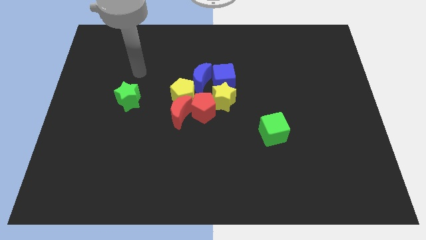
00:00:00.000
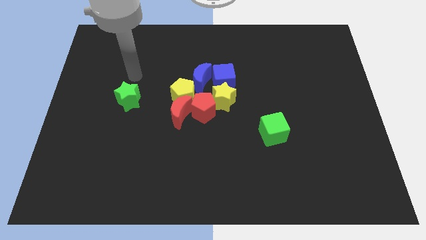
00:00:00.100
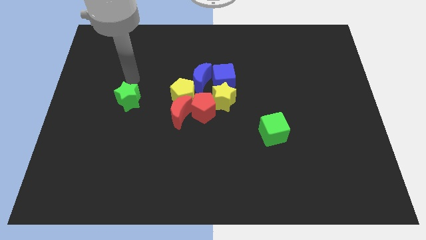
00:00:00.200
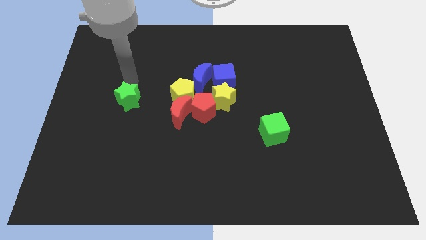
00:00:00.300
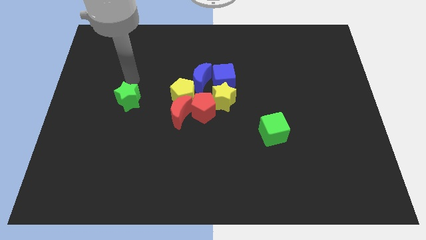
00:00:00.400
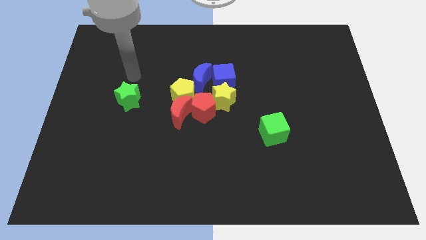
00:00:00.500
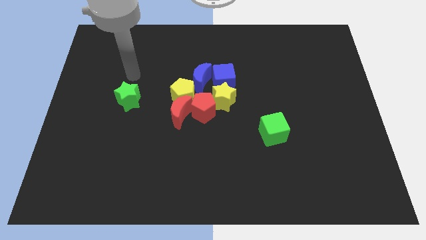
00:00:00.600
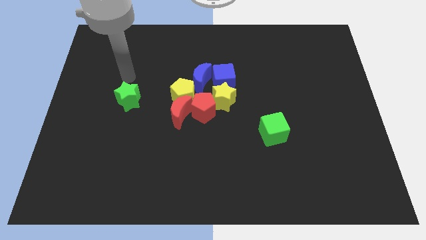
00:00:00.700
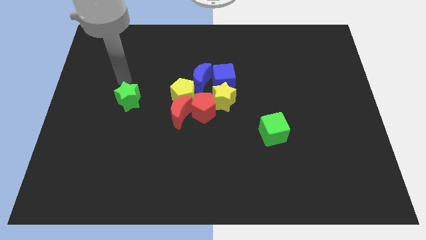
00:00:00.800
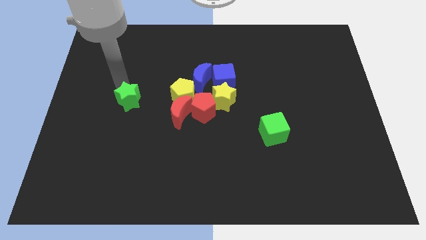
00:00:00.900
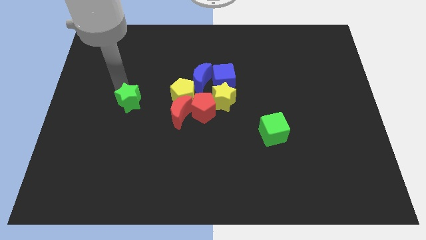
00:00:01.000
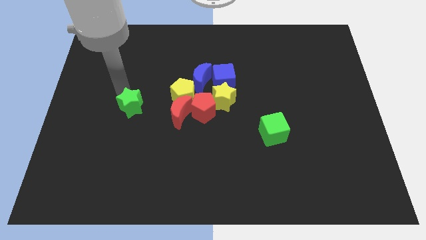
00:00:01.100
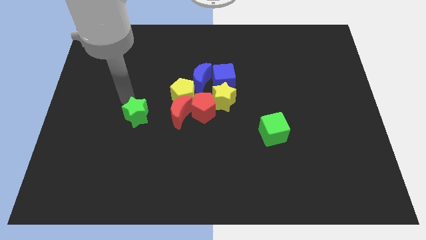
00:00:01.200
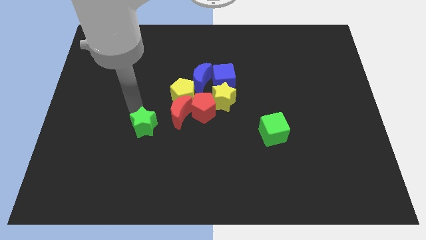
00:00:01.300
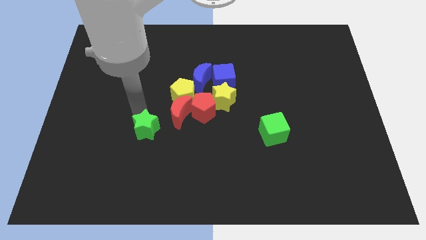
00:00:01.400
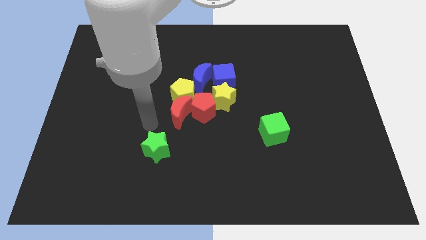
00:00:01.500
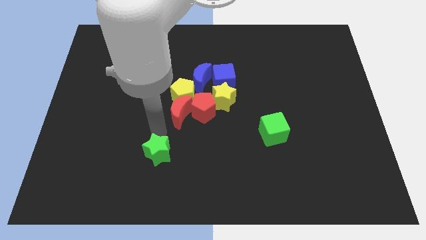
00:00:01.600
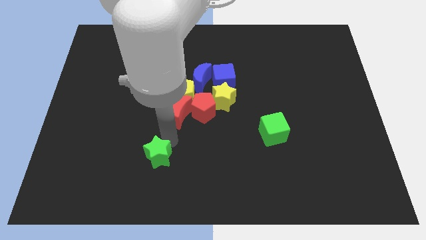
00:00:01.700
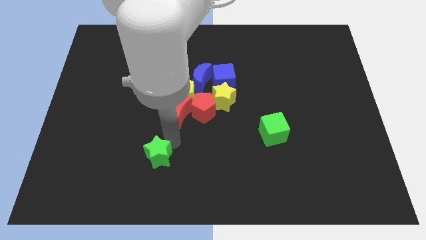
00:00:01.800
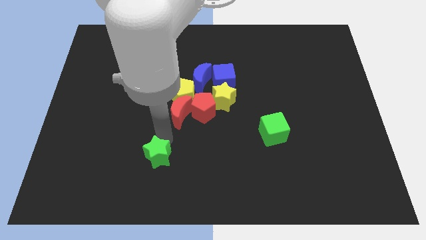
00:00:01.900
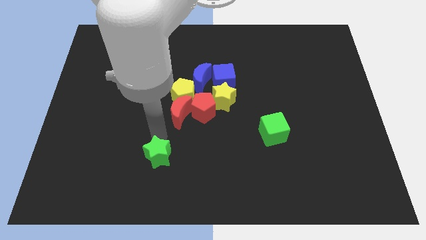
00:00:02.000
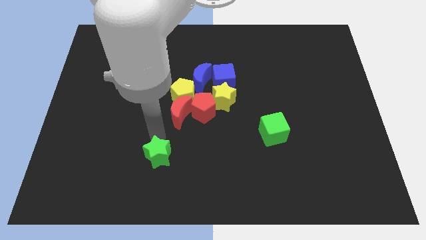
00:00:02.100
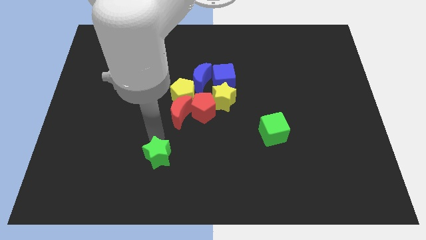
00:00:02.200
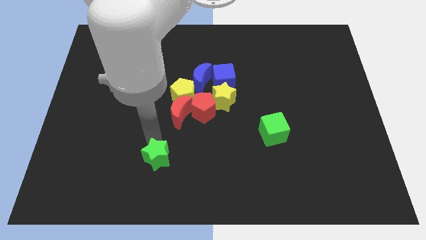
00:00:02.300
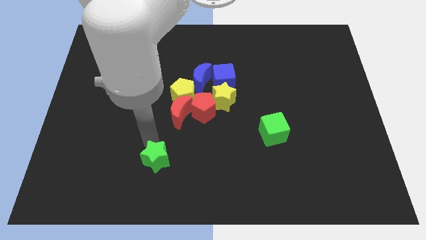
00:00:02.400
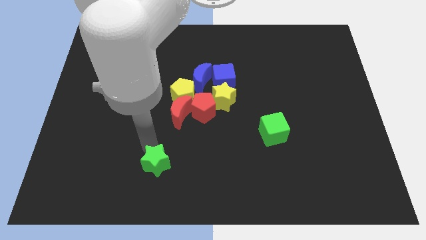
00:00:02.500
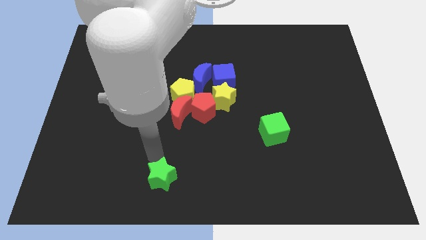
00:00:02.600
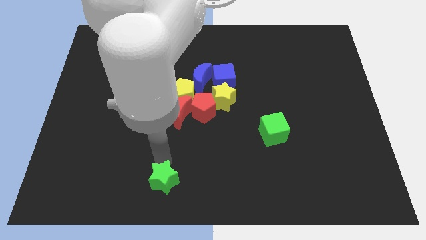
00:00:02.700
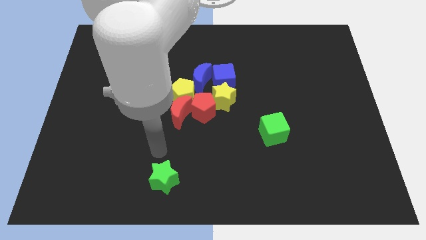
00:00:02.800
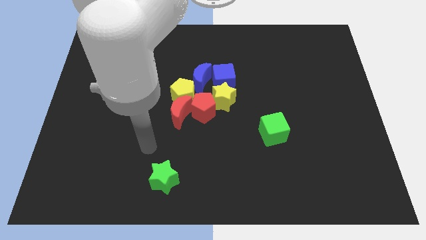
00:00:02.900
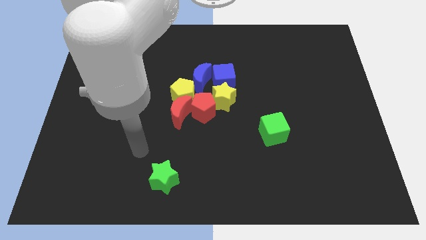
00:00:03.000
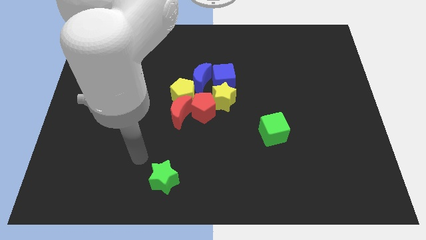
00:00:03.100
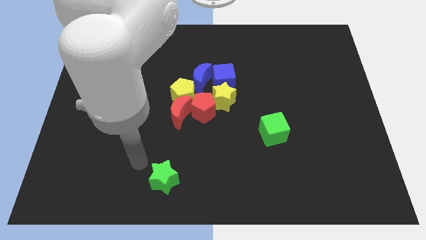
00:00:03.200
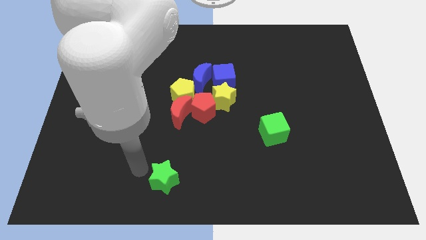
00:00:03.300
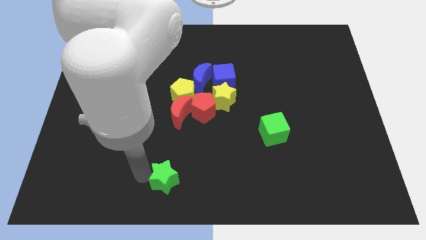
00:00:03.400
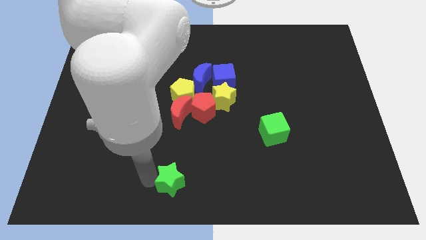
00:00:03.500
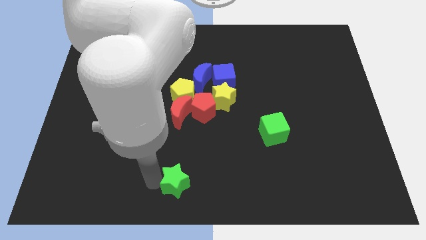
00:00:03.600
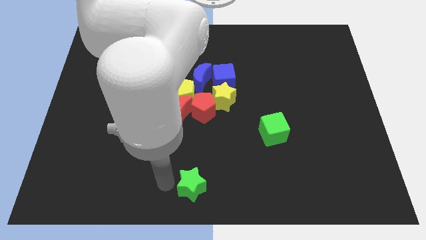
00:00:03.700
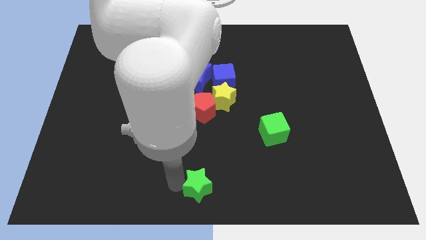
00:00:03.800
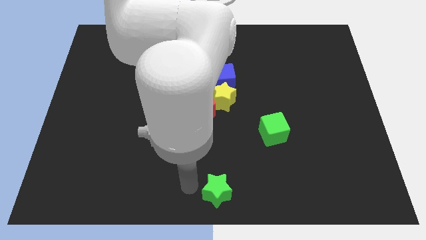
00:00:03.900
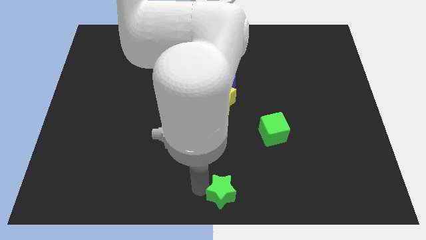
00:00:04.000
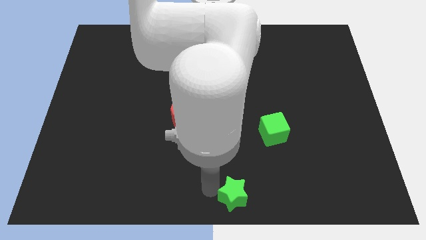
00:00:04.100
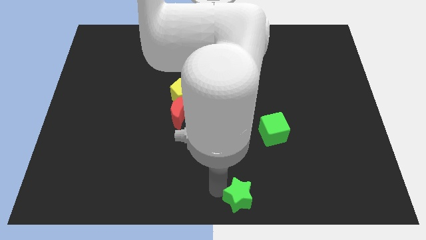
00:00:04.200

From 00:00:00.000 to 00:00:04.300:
put the green star in the bottom center

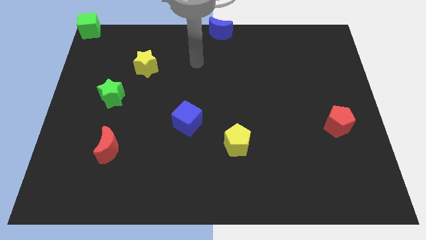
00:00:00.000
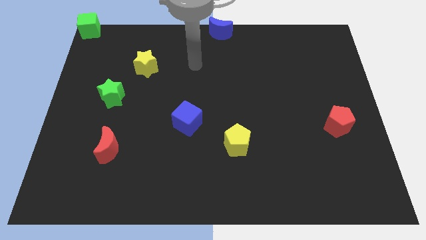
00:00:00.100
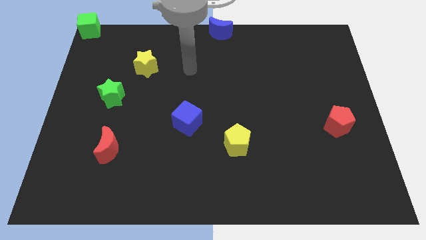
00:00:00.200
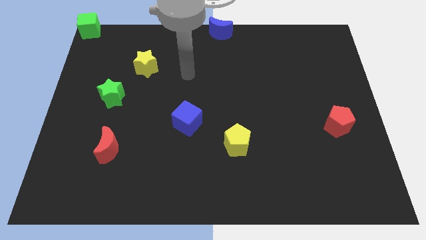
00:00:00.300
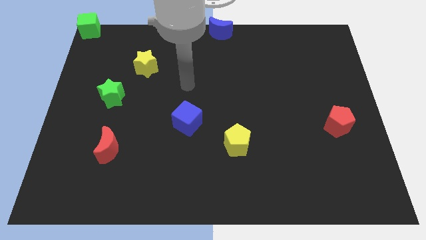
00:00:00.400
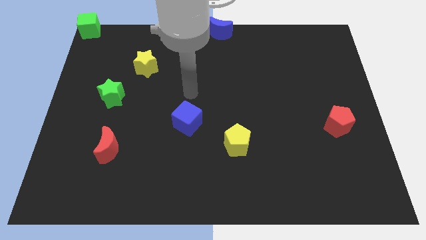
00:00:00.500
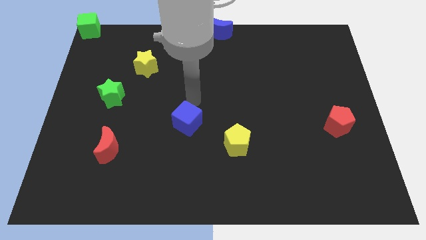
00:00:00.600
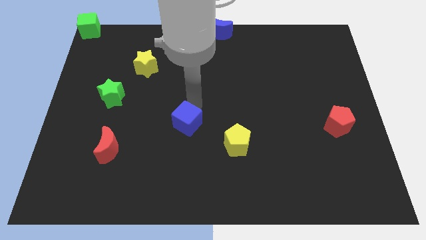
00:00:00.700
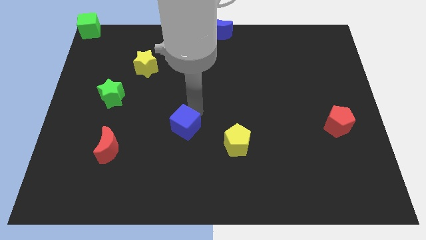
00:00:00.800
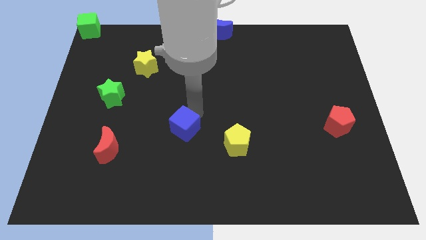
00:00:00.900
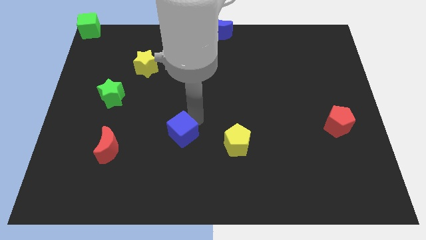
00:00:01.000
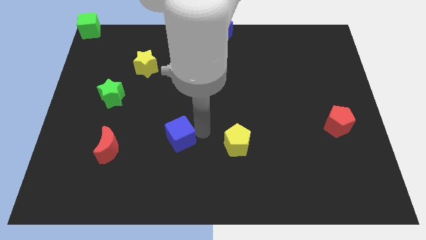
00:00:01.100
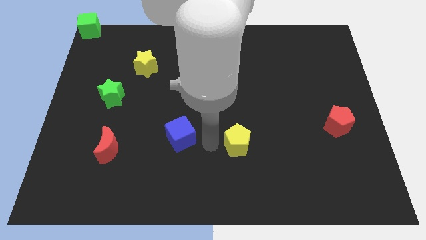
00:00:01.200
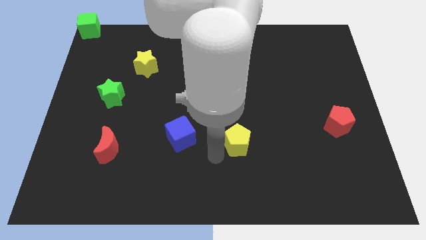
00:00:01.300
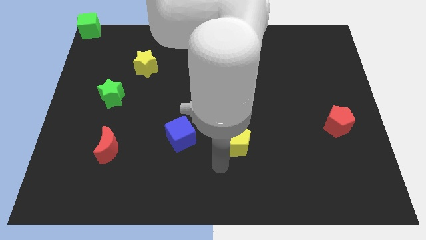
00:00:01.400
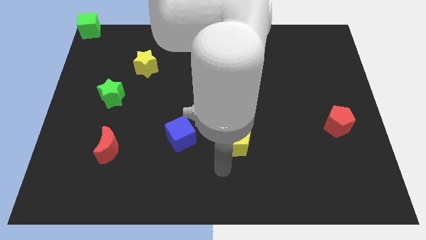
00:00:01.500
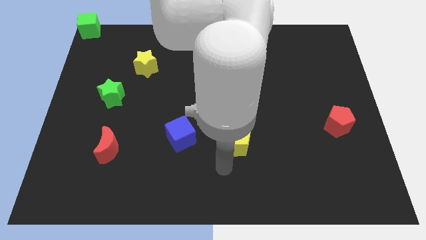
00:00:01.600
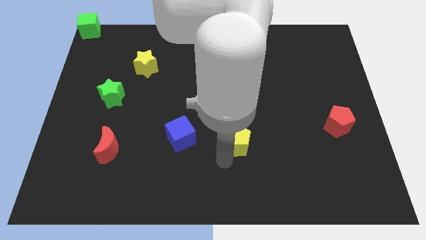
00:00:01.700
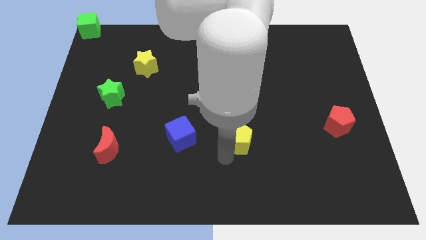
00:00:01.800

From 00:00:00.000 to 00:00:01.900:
slightly move the blue cube down to the board

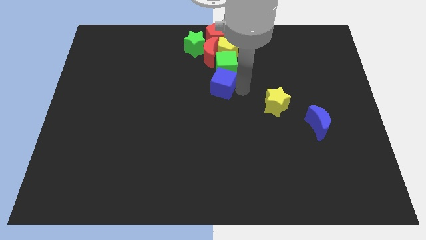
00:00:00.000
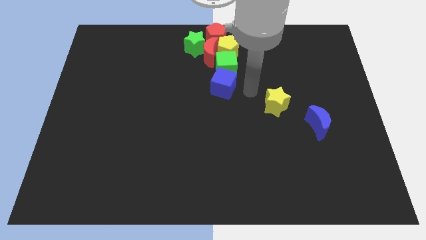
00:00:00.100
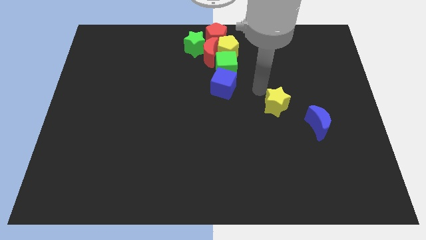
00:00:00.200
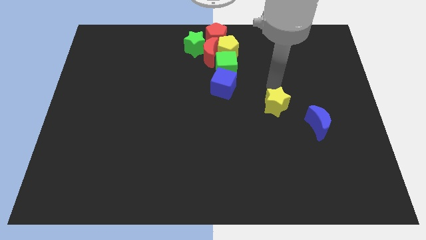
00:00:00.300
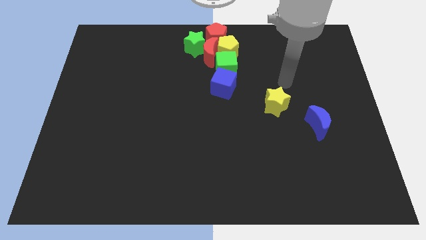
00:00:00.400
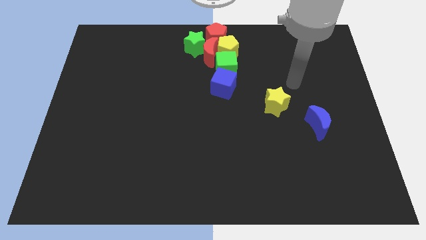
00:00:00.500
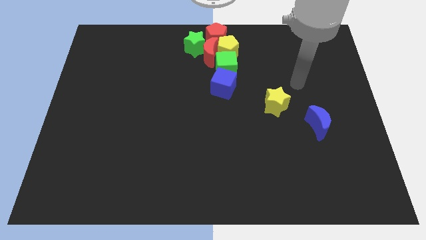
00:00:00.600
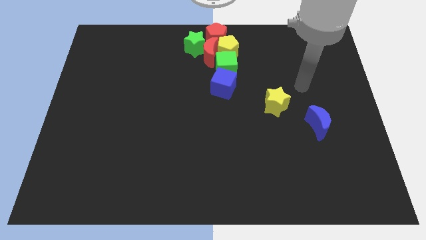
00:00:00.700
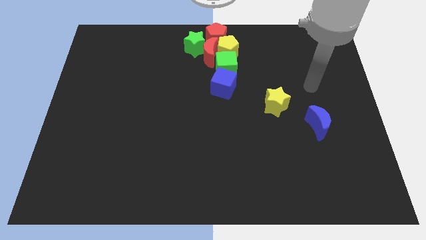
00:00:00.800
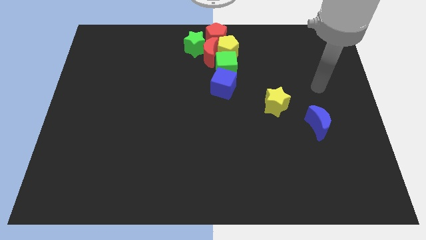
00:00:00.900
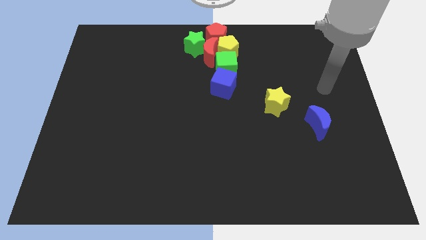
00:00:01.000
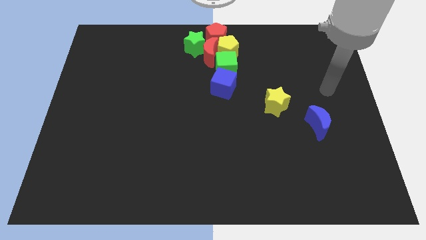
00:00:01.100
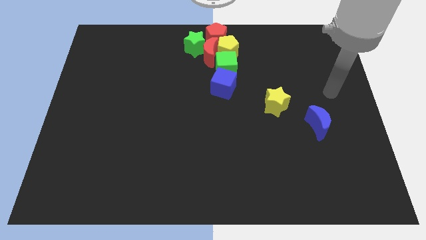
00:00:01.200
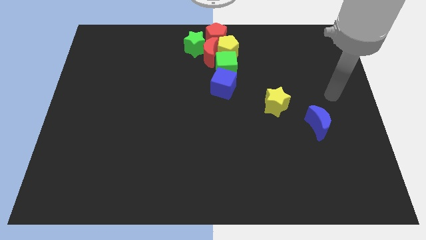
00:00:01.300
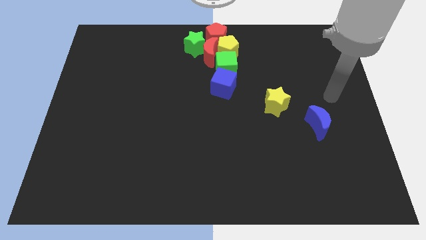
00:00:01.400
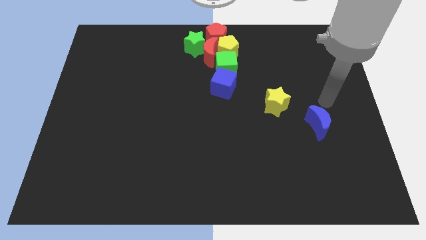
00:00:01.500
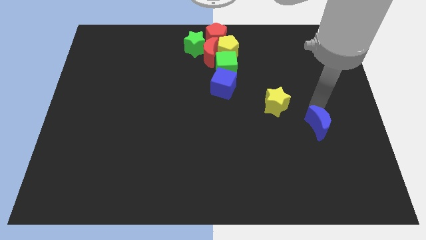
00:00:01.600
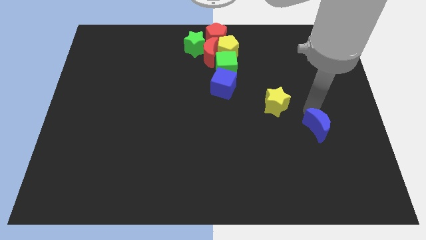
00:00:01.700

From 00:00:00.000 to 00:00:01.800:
touch the top side of the blue crescent

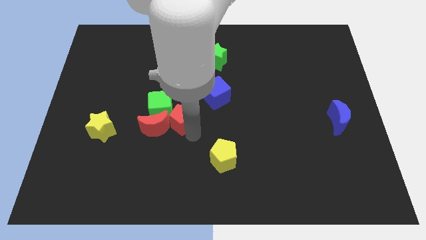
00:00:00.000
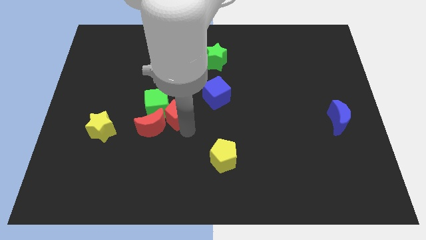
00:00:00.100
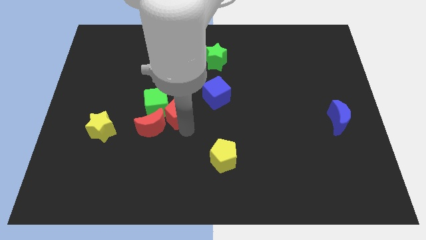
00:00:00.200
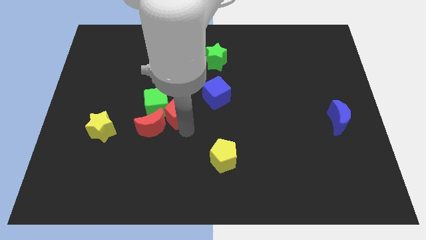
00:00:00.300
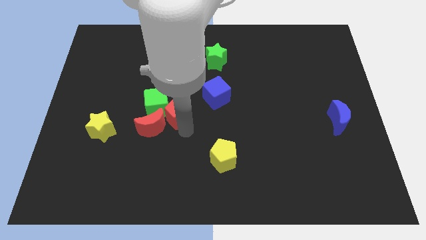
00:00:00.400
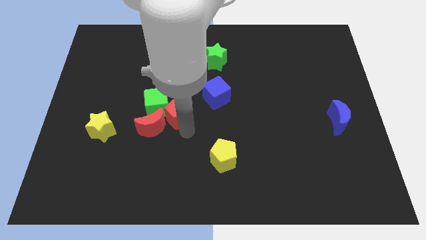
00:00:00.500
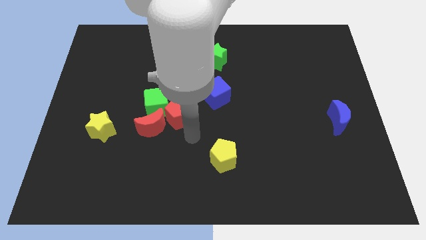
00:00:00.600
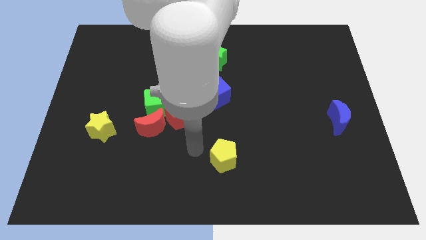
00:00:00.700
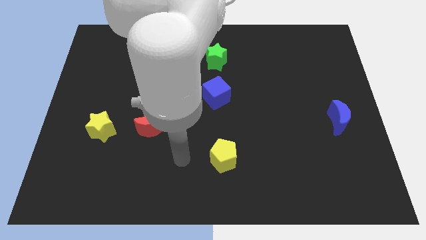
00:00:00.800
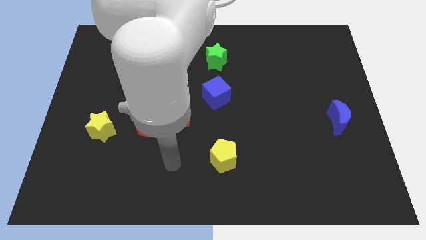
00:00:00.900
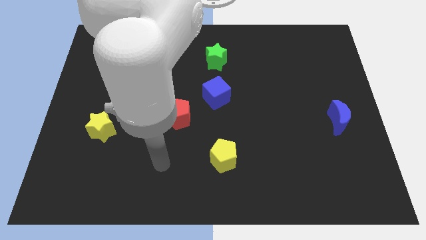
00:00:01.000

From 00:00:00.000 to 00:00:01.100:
push the red pentagon slightly to the top
